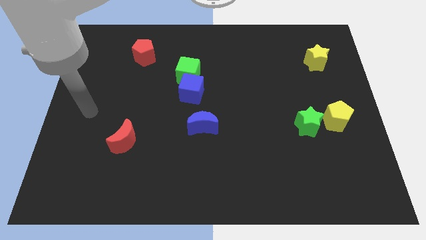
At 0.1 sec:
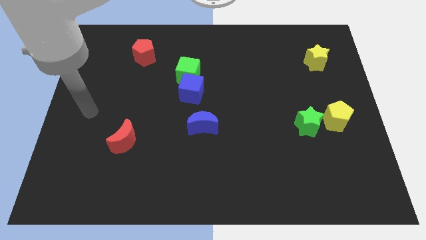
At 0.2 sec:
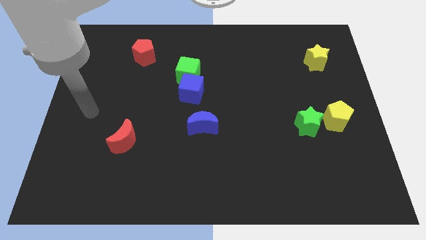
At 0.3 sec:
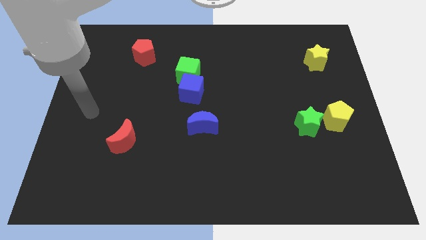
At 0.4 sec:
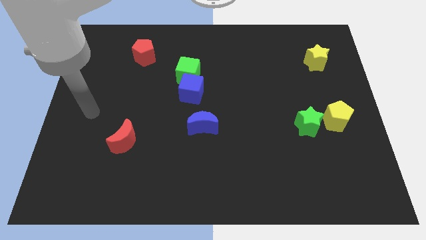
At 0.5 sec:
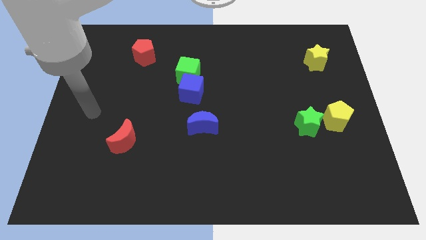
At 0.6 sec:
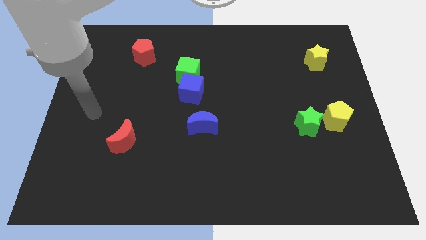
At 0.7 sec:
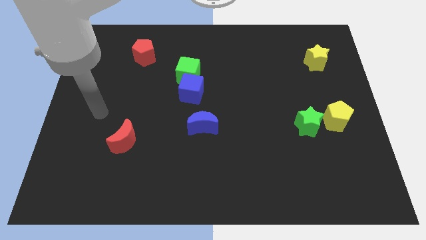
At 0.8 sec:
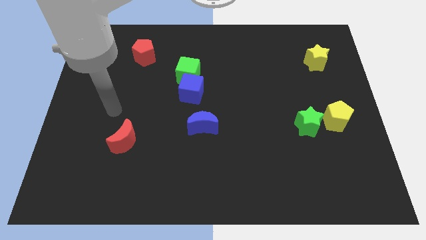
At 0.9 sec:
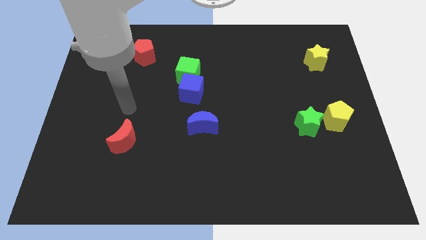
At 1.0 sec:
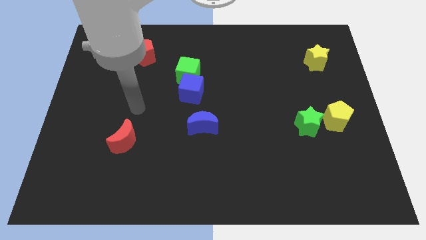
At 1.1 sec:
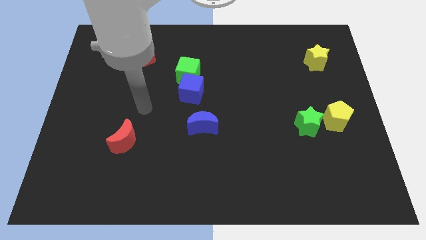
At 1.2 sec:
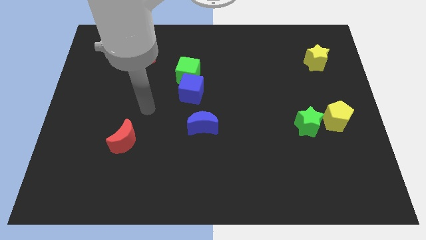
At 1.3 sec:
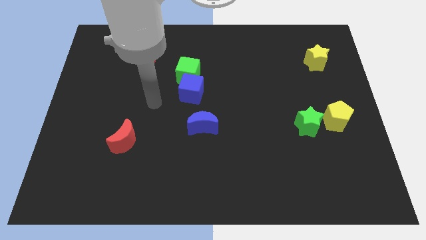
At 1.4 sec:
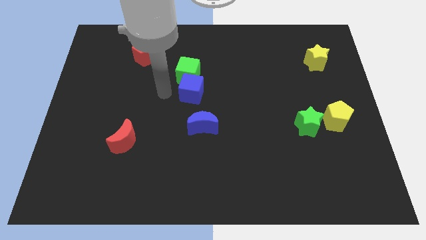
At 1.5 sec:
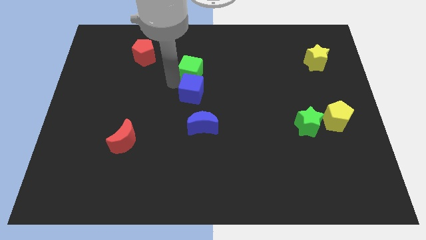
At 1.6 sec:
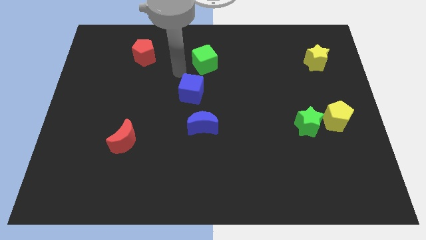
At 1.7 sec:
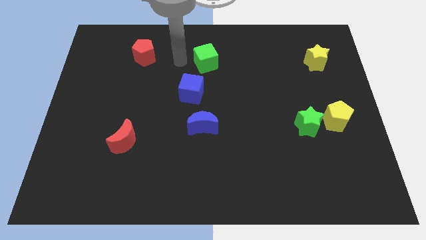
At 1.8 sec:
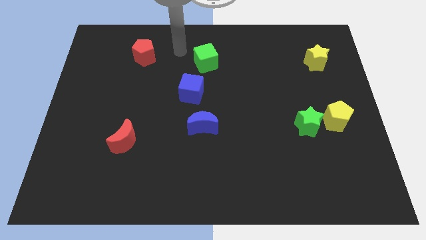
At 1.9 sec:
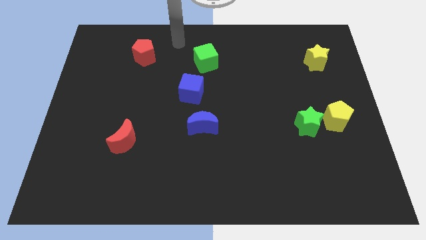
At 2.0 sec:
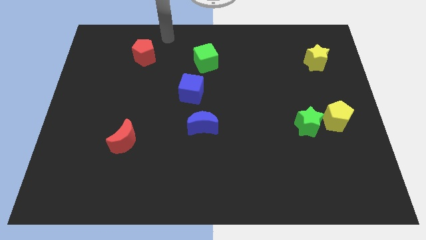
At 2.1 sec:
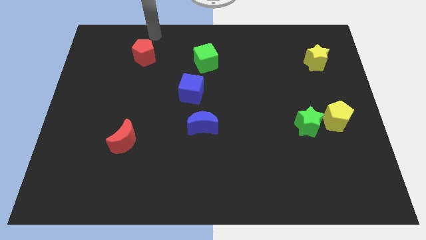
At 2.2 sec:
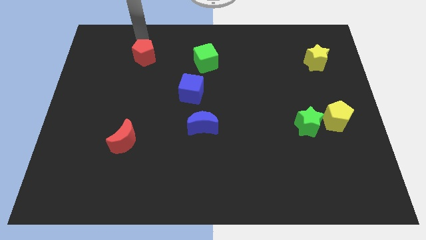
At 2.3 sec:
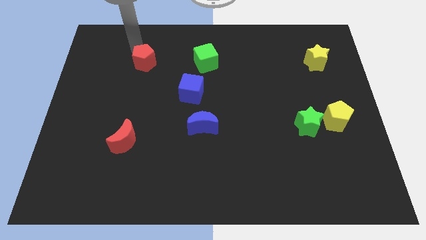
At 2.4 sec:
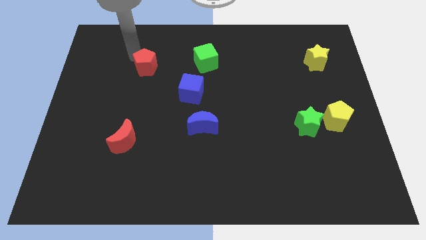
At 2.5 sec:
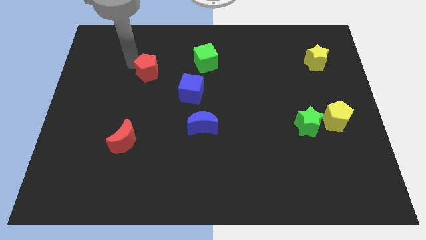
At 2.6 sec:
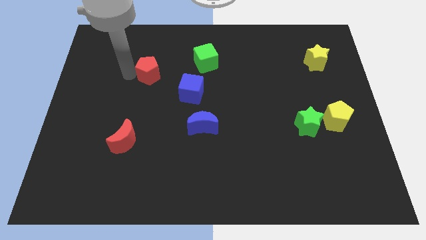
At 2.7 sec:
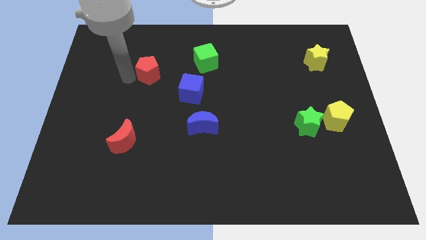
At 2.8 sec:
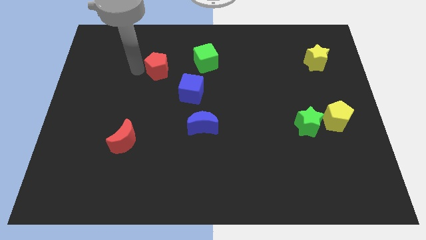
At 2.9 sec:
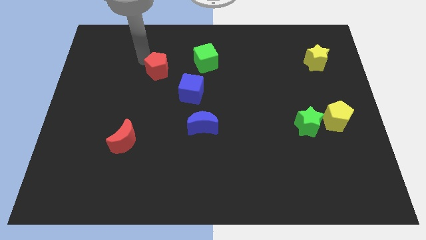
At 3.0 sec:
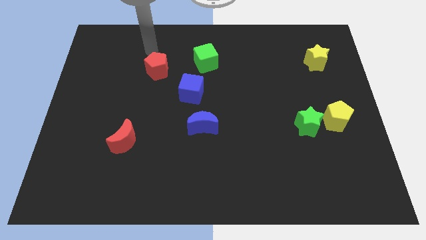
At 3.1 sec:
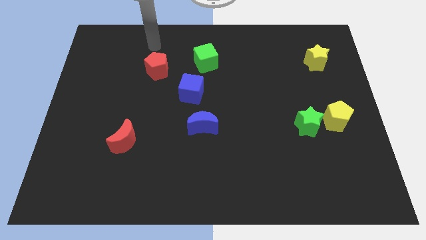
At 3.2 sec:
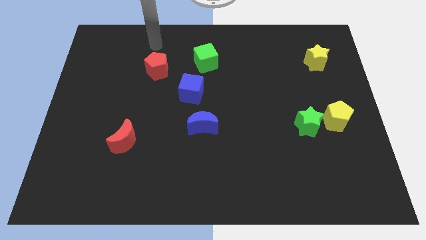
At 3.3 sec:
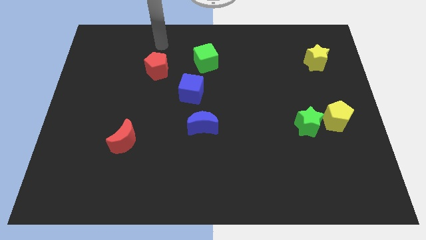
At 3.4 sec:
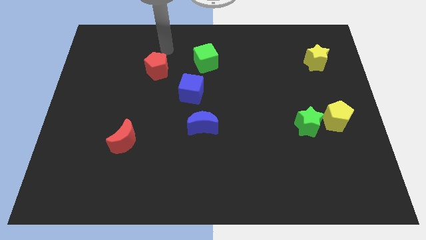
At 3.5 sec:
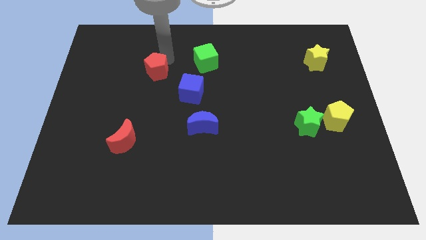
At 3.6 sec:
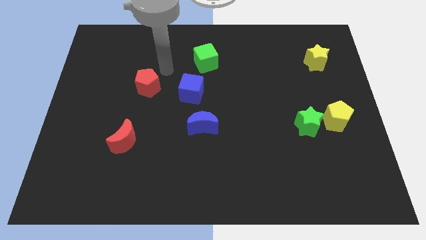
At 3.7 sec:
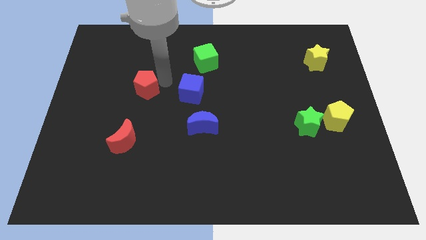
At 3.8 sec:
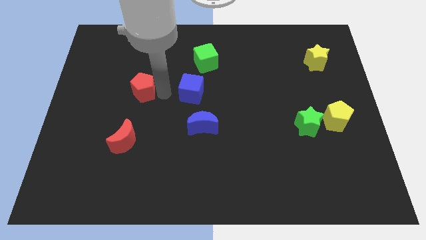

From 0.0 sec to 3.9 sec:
push red pentagon to the left of the blue cube

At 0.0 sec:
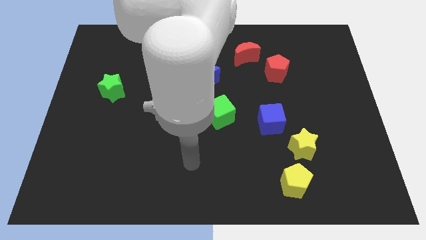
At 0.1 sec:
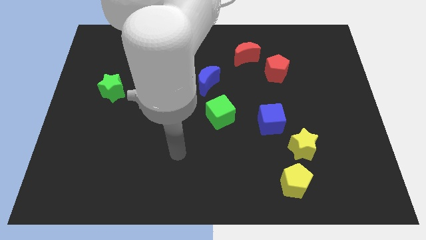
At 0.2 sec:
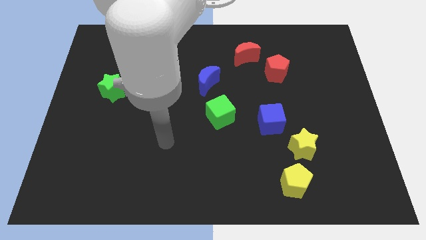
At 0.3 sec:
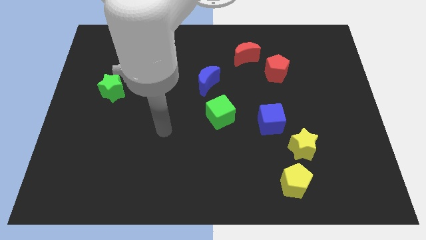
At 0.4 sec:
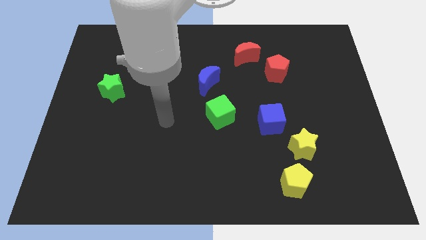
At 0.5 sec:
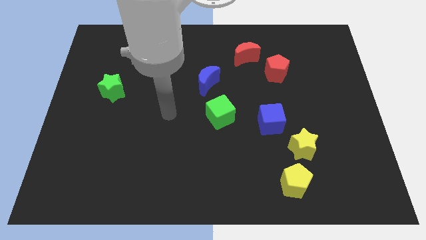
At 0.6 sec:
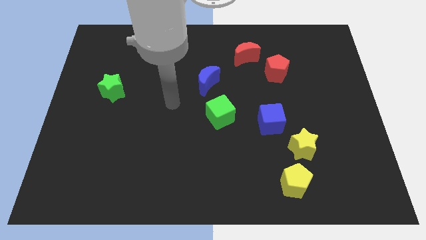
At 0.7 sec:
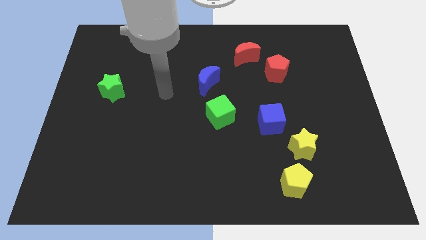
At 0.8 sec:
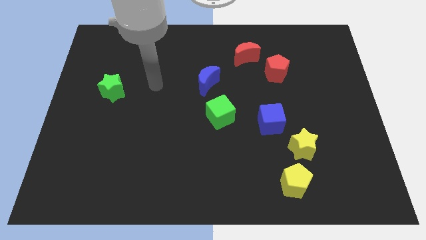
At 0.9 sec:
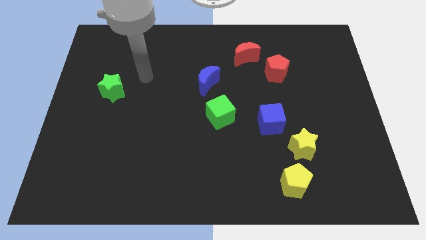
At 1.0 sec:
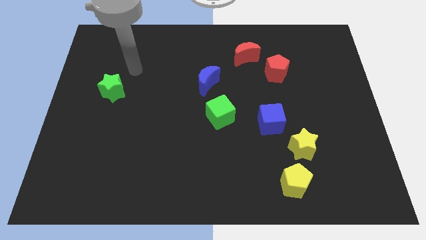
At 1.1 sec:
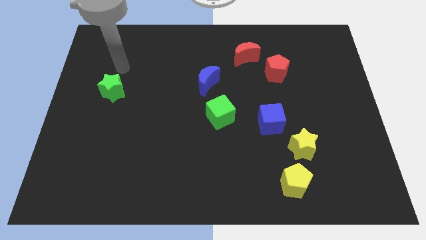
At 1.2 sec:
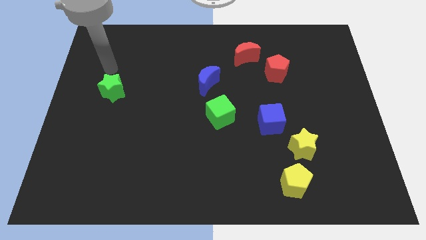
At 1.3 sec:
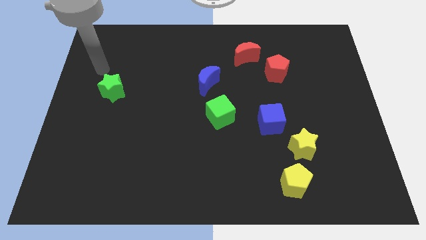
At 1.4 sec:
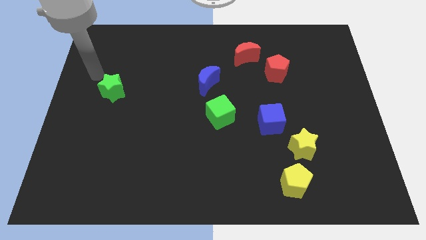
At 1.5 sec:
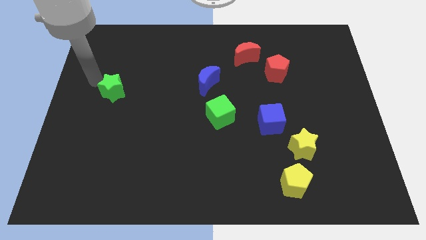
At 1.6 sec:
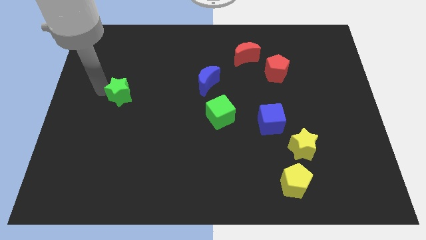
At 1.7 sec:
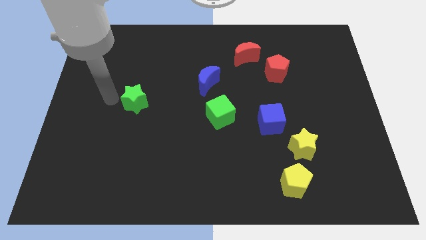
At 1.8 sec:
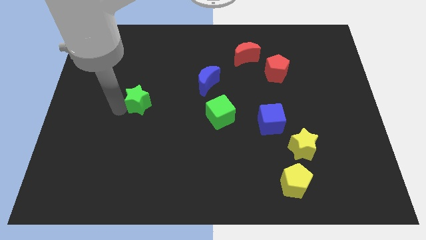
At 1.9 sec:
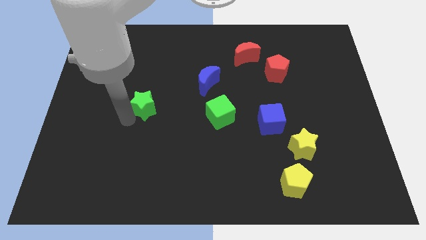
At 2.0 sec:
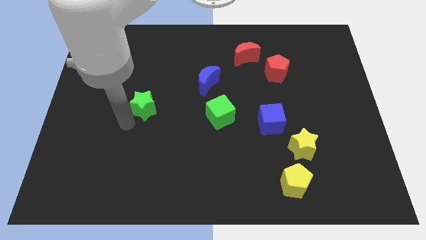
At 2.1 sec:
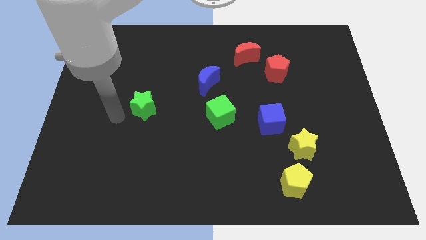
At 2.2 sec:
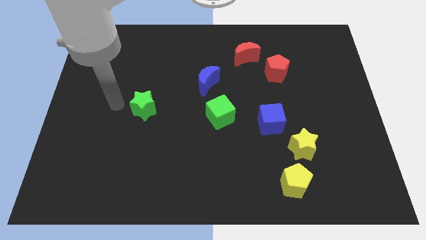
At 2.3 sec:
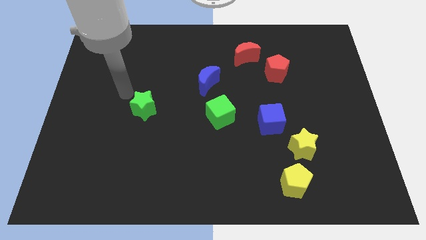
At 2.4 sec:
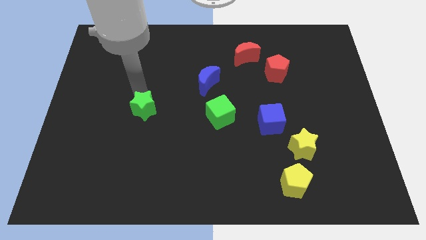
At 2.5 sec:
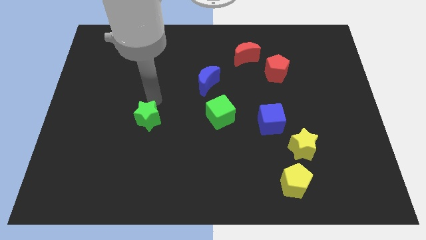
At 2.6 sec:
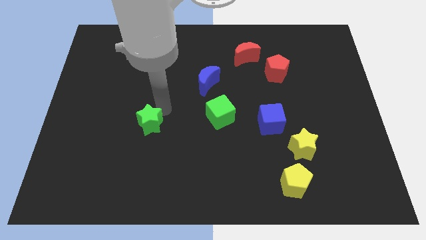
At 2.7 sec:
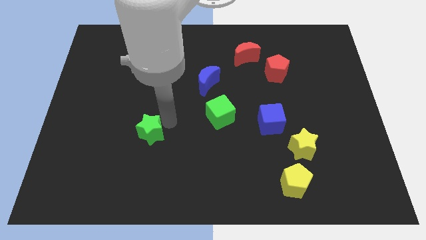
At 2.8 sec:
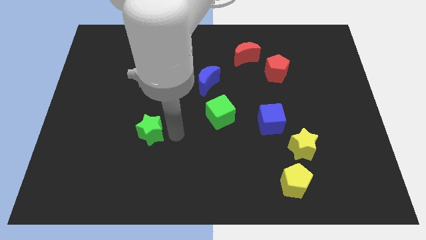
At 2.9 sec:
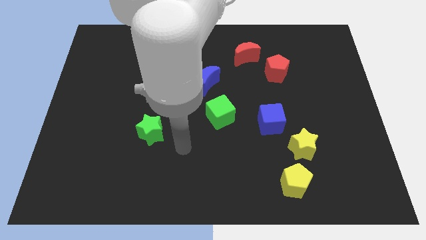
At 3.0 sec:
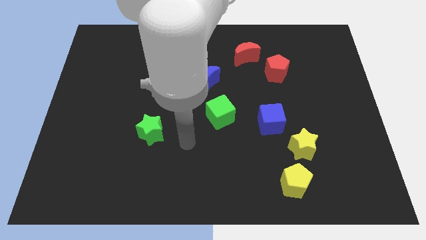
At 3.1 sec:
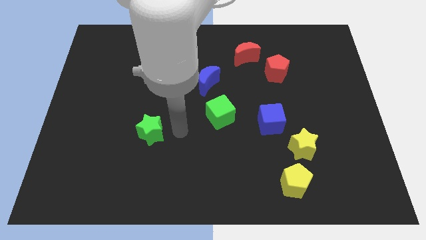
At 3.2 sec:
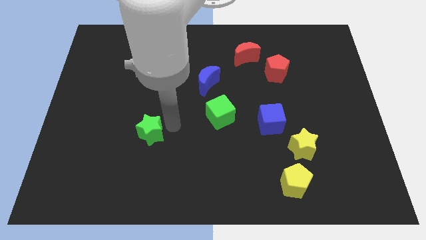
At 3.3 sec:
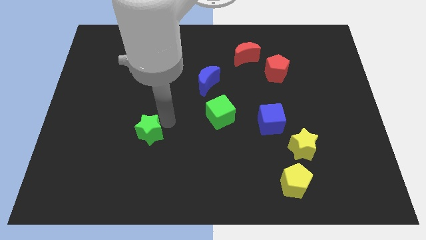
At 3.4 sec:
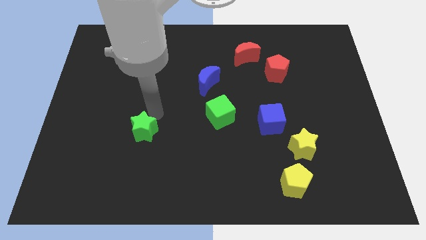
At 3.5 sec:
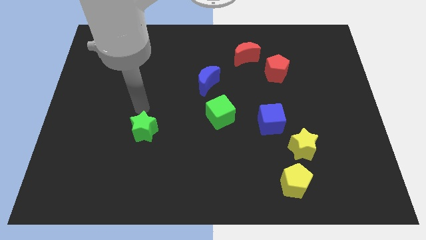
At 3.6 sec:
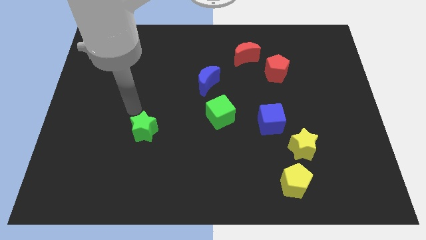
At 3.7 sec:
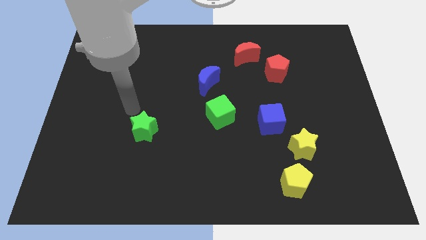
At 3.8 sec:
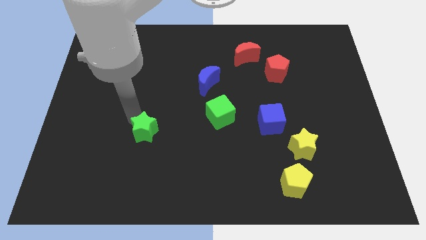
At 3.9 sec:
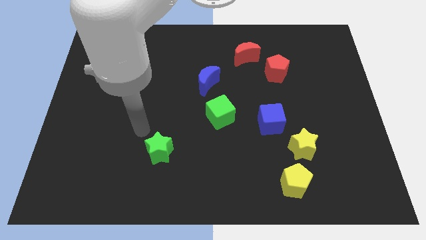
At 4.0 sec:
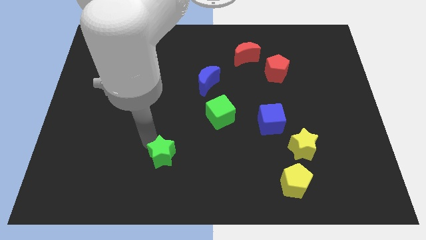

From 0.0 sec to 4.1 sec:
place green star diagonal to green cube

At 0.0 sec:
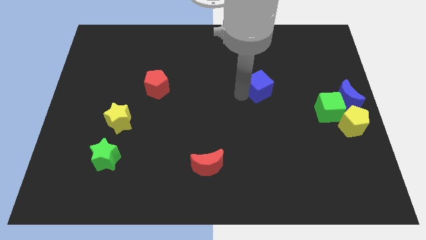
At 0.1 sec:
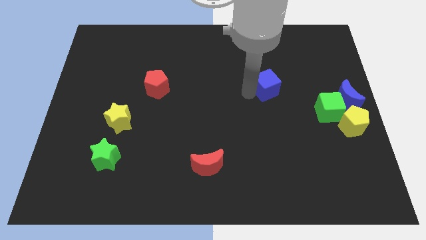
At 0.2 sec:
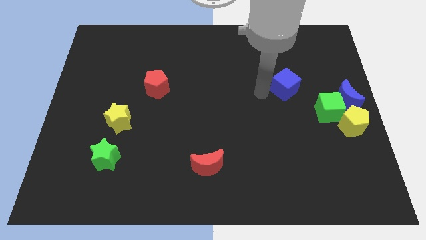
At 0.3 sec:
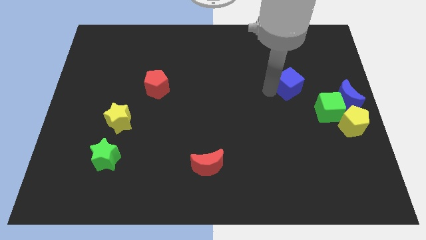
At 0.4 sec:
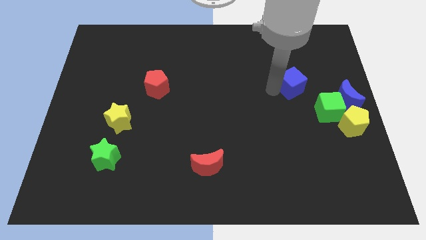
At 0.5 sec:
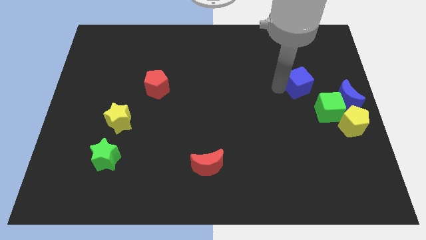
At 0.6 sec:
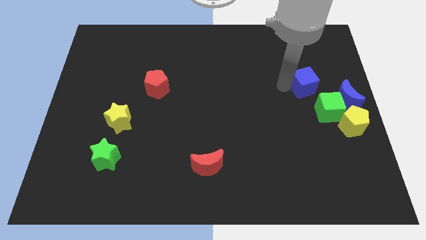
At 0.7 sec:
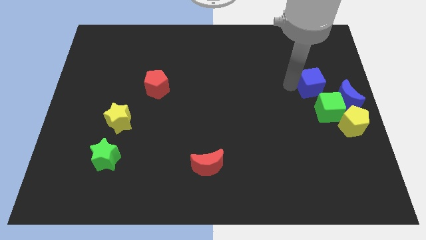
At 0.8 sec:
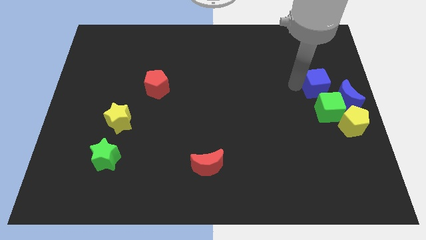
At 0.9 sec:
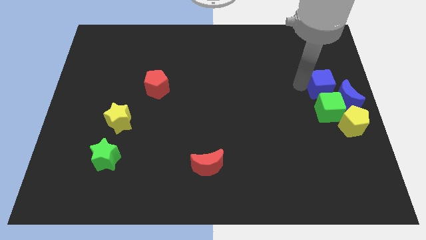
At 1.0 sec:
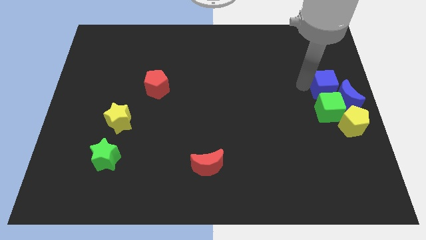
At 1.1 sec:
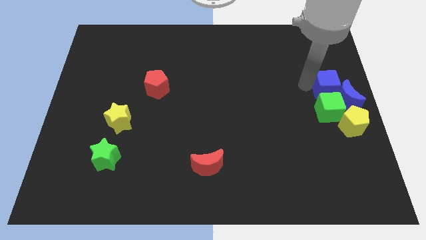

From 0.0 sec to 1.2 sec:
move the blue cube into the blue crescent
